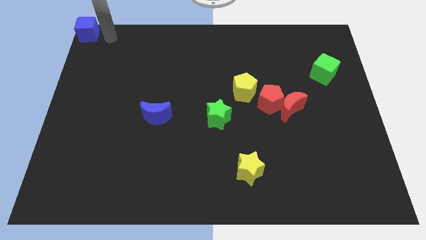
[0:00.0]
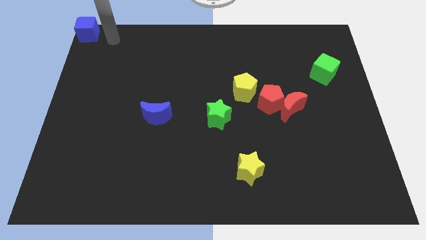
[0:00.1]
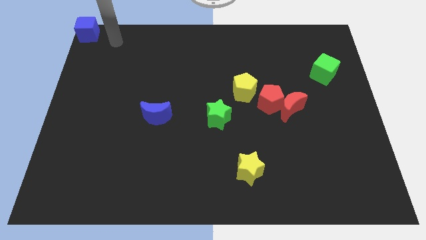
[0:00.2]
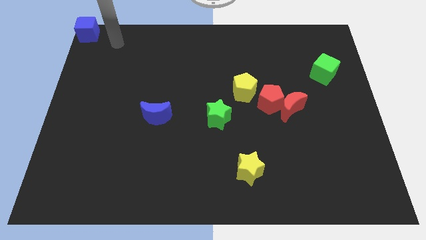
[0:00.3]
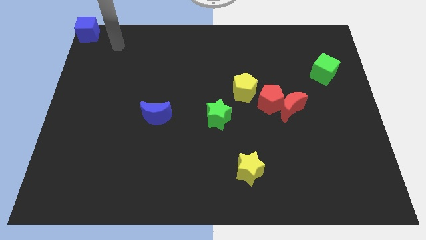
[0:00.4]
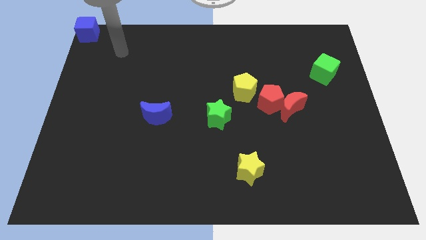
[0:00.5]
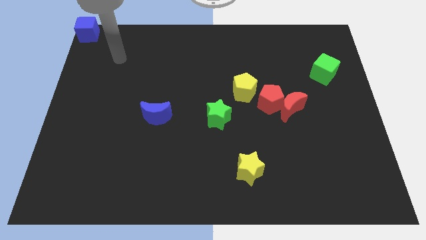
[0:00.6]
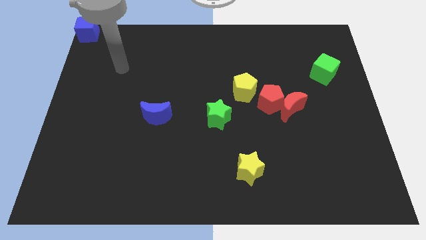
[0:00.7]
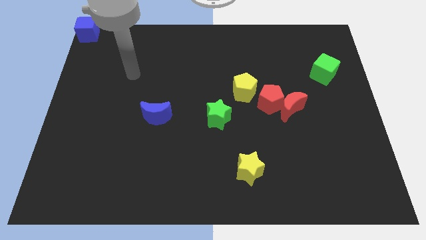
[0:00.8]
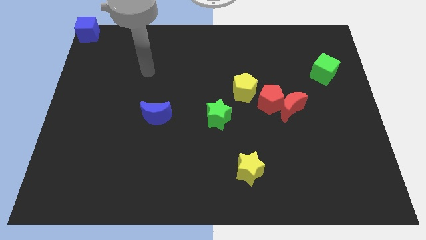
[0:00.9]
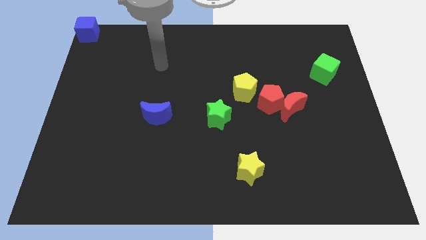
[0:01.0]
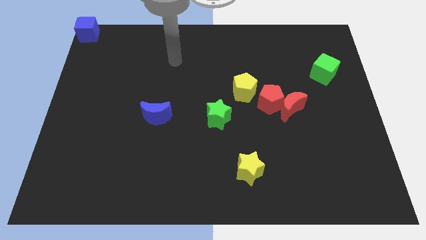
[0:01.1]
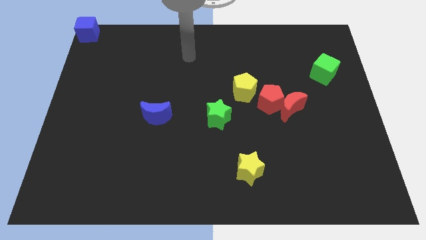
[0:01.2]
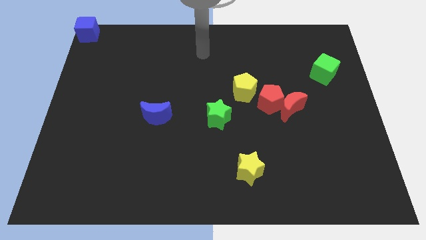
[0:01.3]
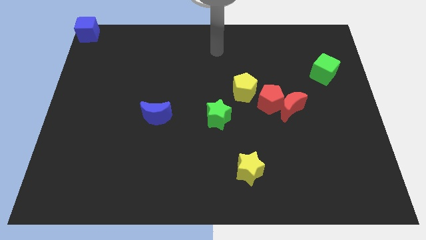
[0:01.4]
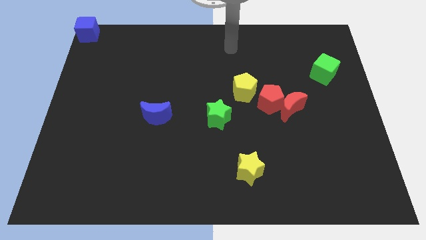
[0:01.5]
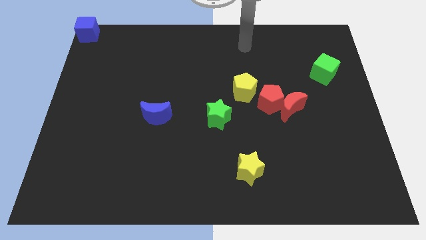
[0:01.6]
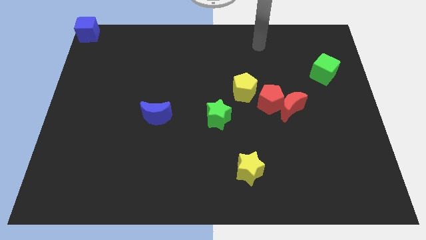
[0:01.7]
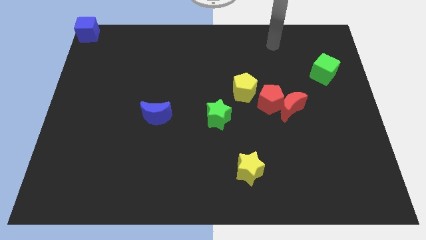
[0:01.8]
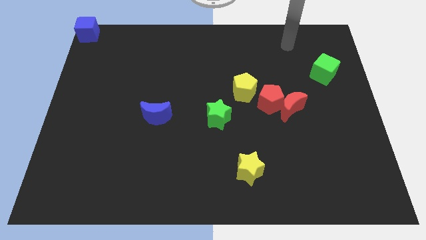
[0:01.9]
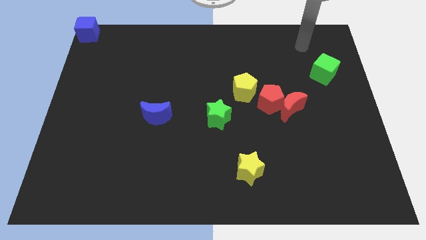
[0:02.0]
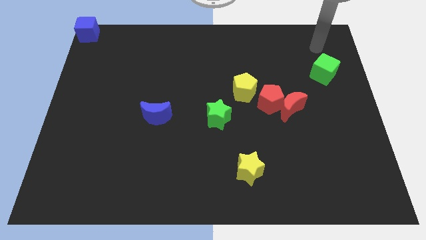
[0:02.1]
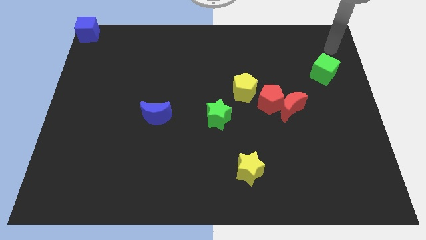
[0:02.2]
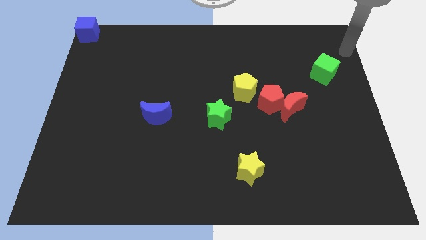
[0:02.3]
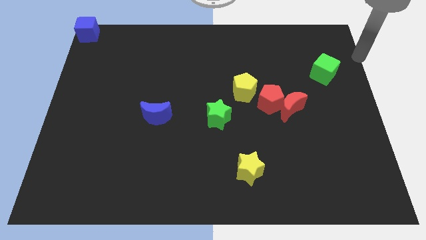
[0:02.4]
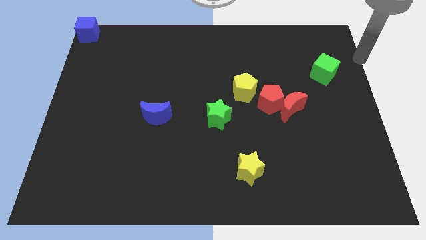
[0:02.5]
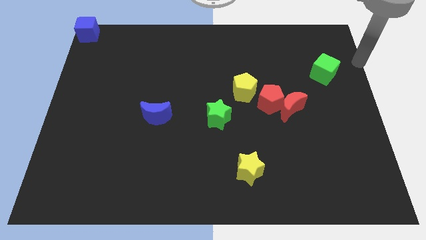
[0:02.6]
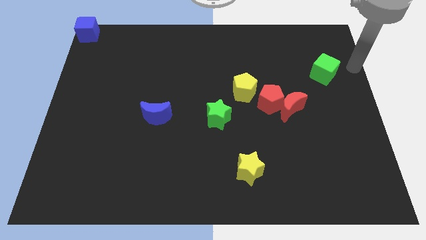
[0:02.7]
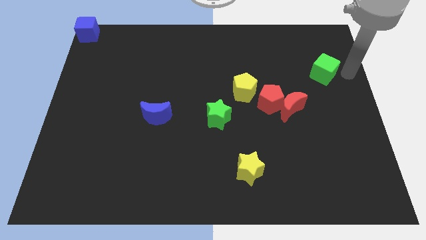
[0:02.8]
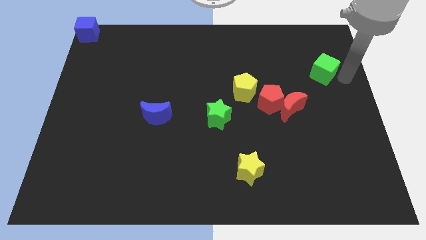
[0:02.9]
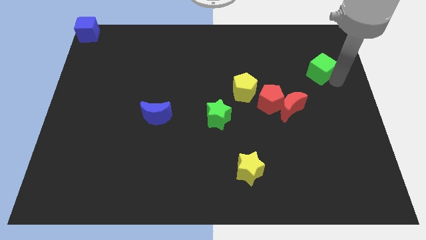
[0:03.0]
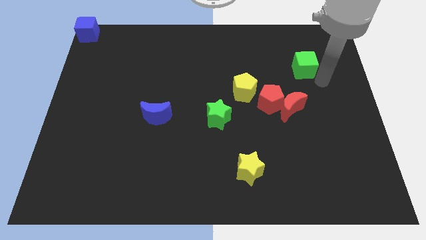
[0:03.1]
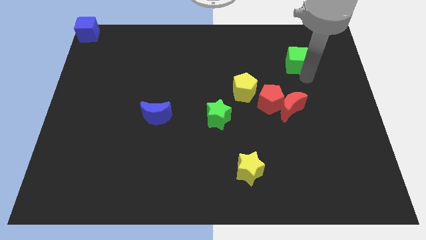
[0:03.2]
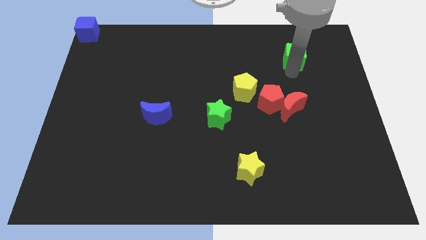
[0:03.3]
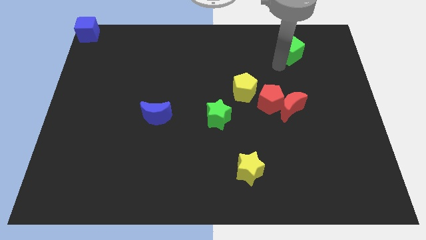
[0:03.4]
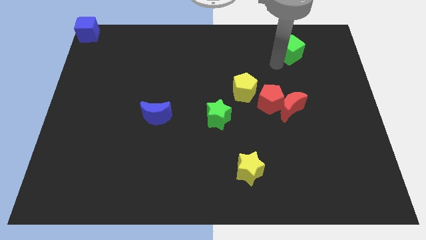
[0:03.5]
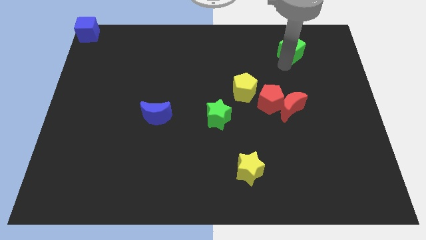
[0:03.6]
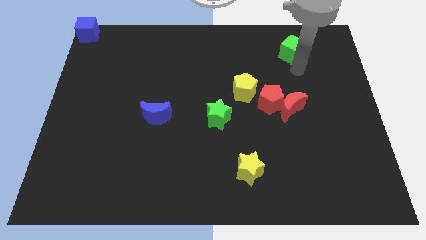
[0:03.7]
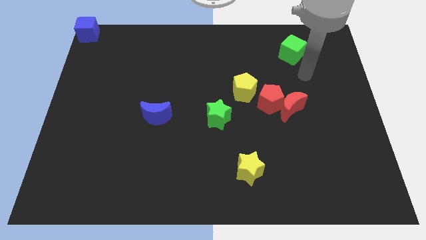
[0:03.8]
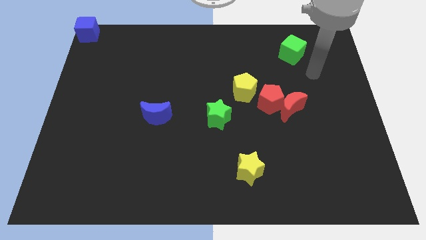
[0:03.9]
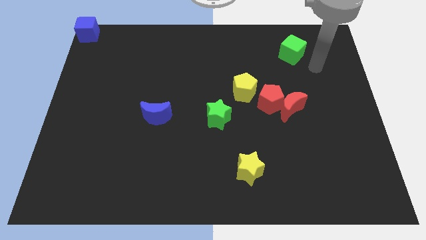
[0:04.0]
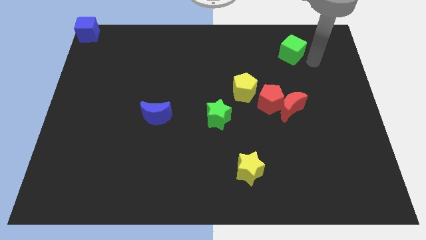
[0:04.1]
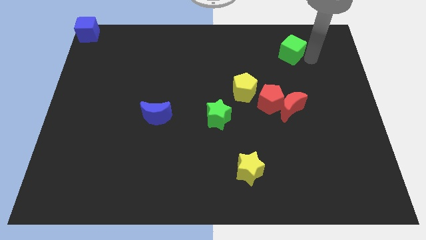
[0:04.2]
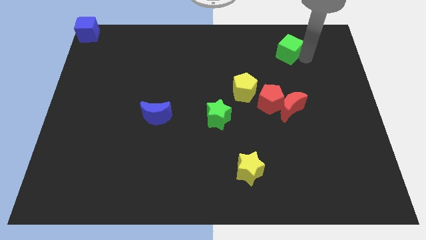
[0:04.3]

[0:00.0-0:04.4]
place the green cube above the red pentagon

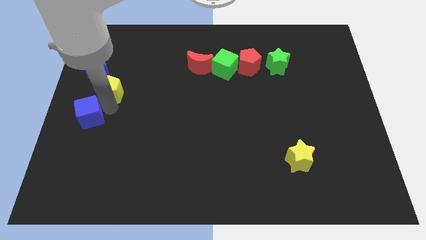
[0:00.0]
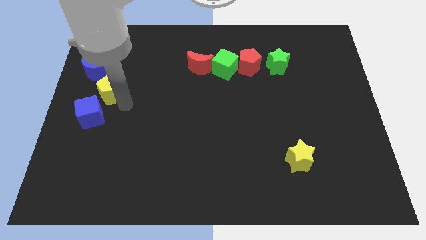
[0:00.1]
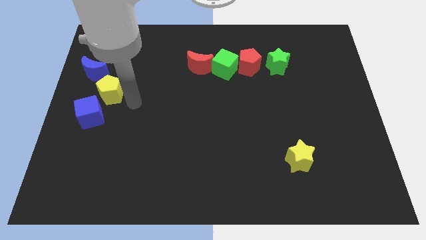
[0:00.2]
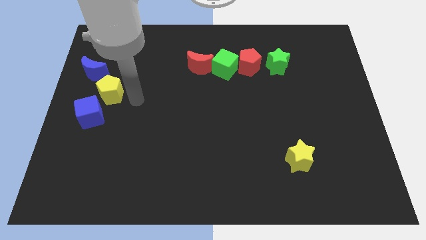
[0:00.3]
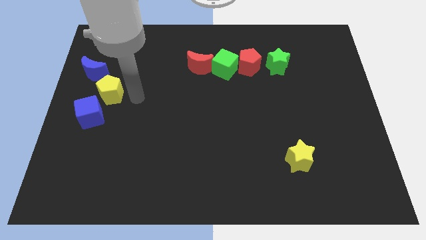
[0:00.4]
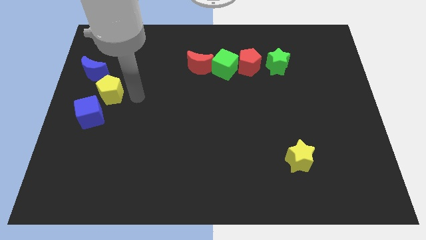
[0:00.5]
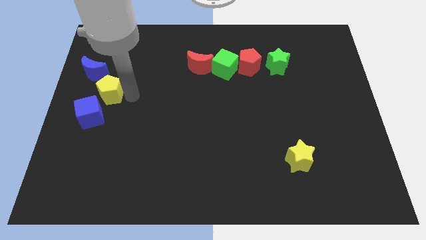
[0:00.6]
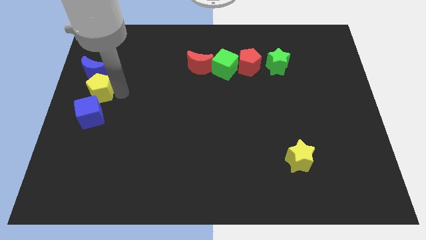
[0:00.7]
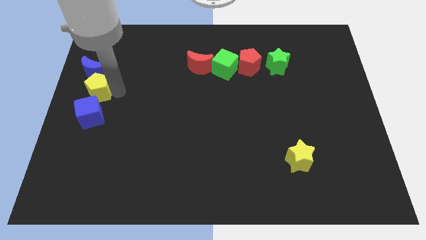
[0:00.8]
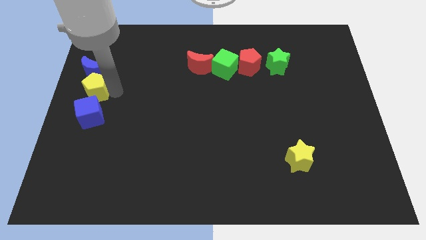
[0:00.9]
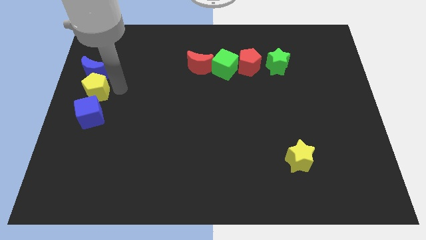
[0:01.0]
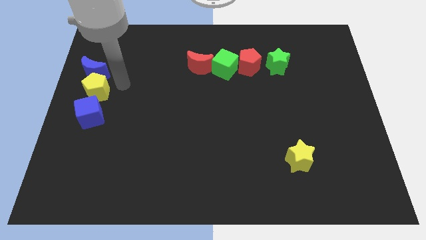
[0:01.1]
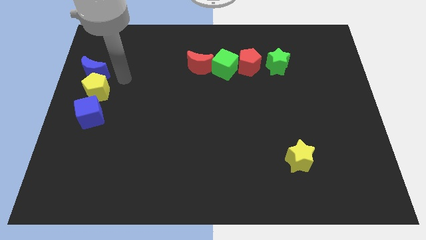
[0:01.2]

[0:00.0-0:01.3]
put the yellow pentagon in between the blue crescent and the blue cube

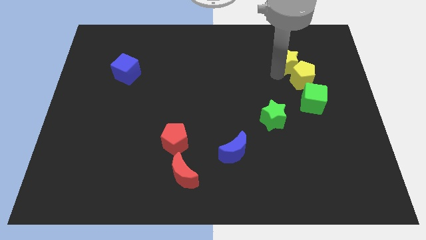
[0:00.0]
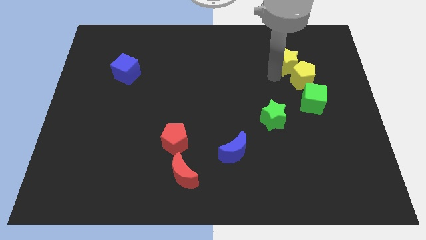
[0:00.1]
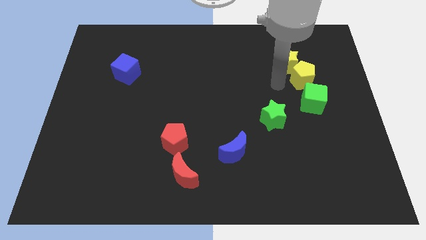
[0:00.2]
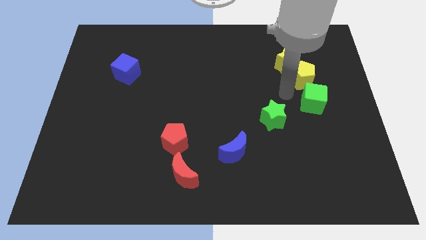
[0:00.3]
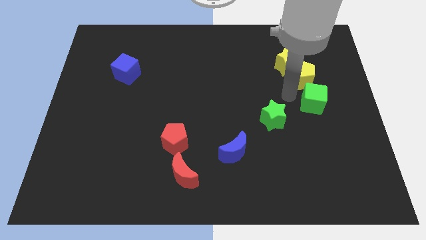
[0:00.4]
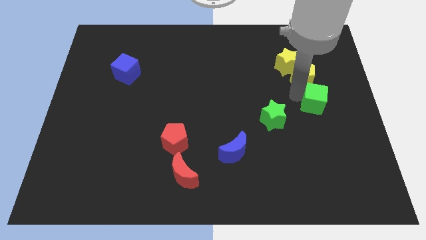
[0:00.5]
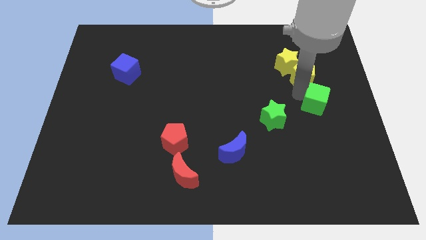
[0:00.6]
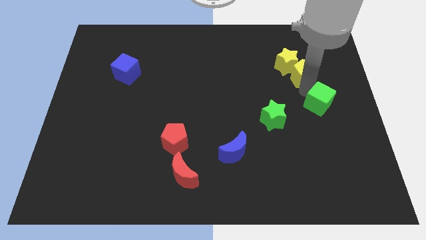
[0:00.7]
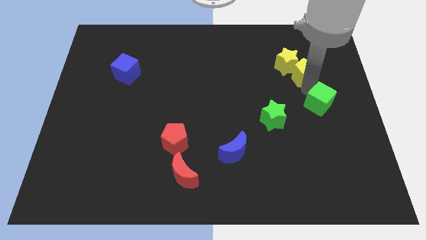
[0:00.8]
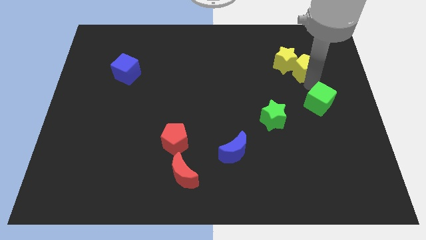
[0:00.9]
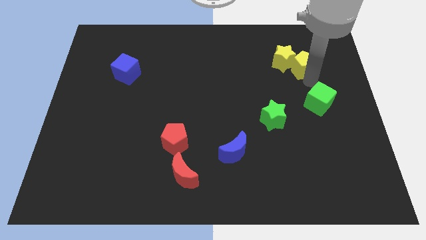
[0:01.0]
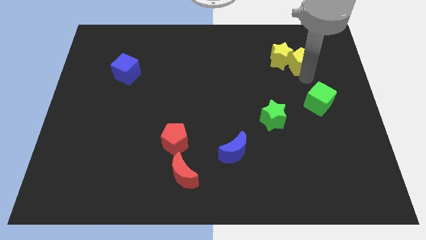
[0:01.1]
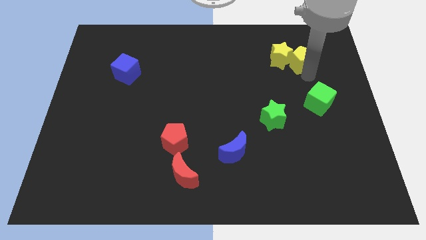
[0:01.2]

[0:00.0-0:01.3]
push yellow pentagon slightly upwards

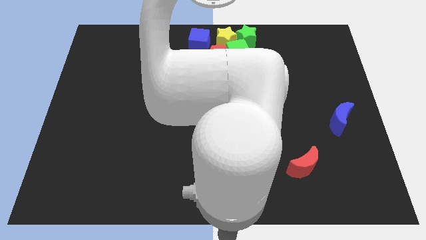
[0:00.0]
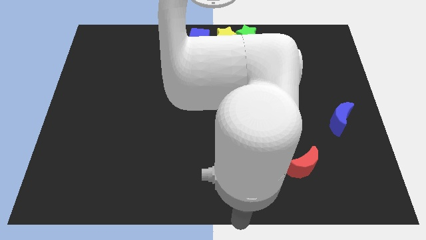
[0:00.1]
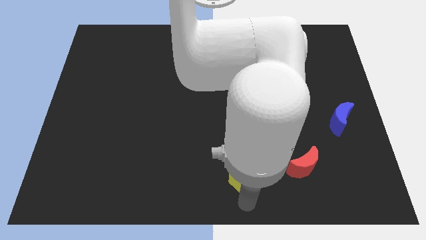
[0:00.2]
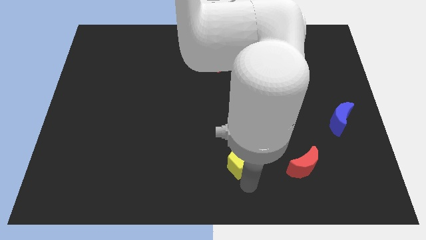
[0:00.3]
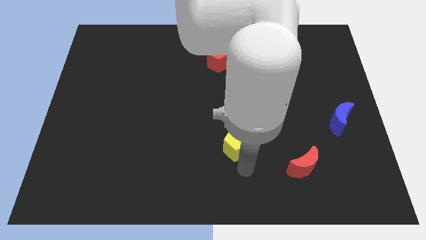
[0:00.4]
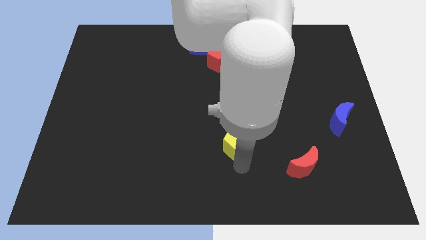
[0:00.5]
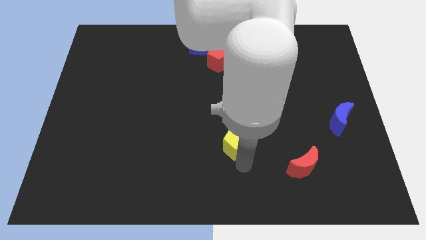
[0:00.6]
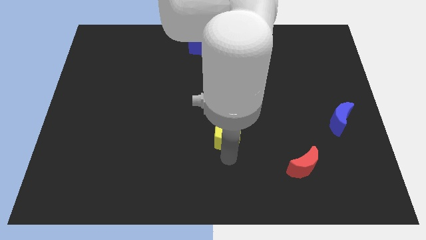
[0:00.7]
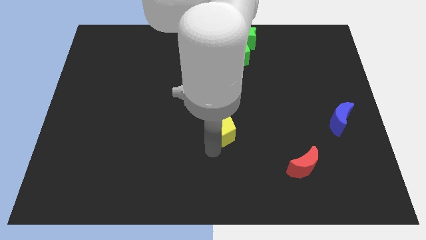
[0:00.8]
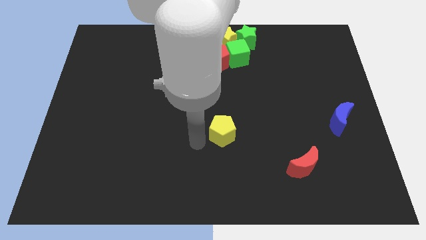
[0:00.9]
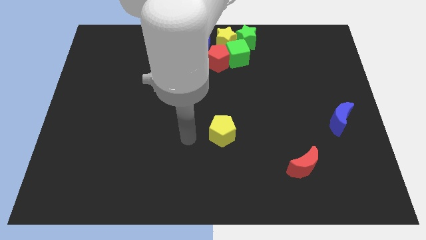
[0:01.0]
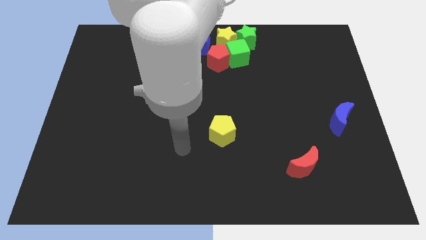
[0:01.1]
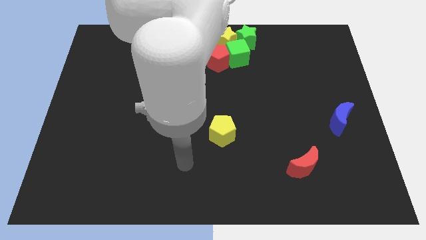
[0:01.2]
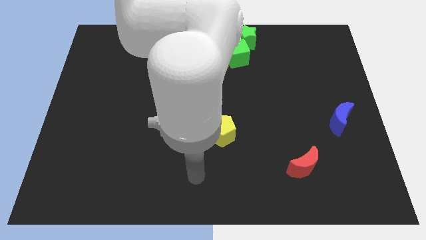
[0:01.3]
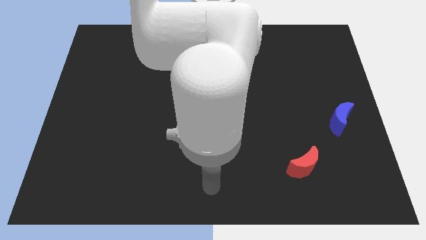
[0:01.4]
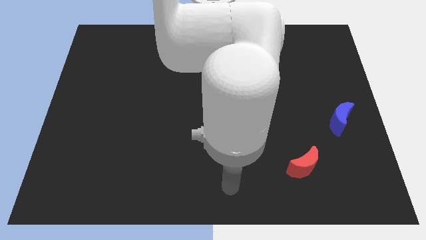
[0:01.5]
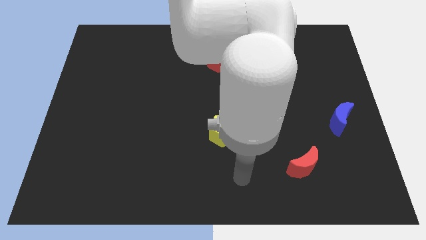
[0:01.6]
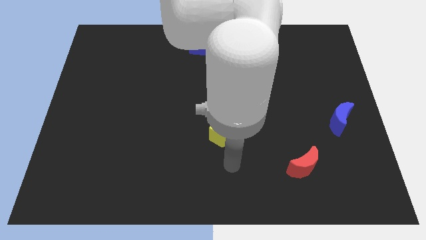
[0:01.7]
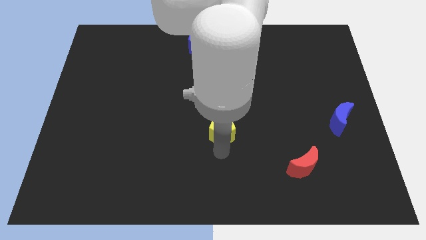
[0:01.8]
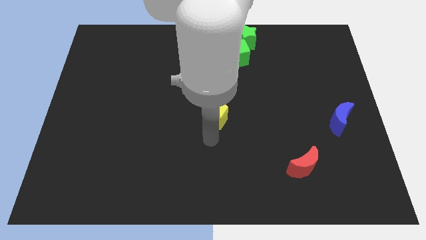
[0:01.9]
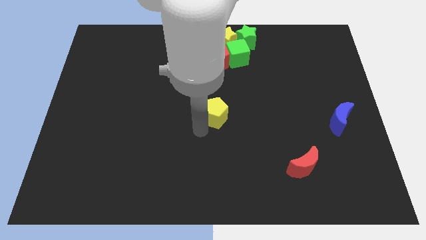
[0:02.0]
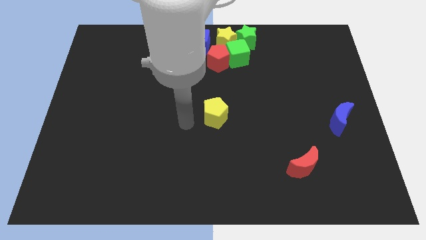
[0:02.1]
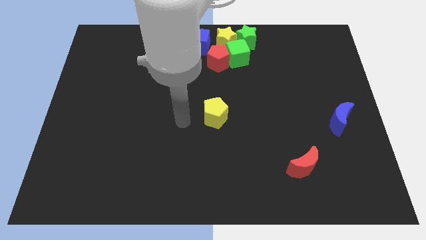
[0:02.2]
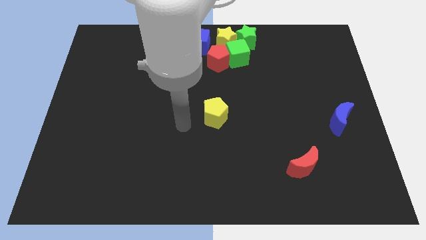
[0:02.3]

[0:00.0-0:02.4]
place the yellow pentagon to the center
